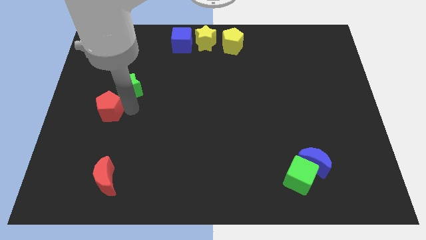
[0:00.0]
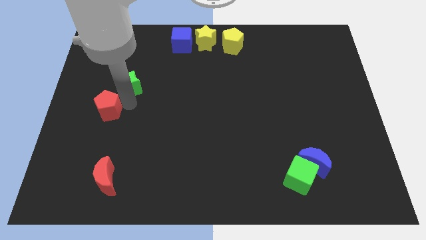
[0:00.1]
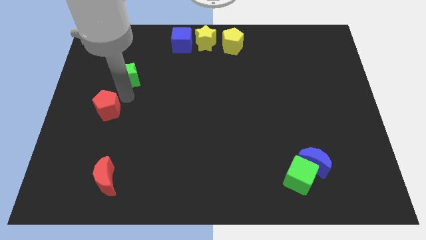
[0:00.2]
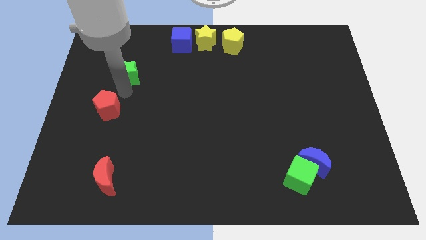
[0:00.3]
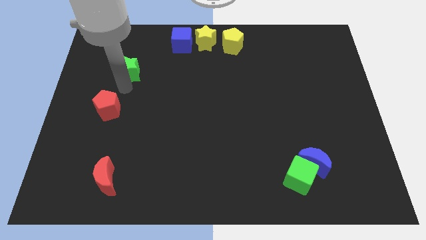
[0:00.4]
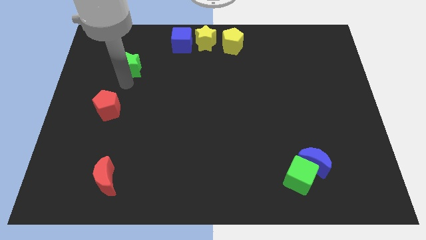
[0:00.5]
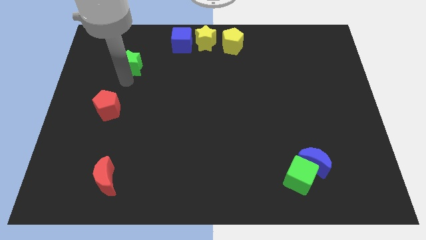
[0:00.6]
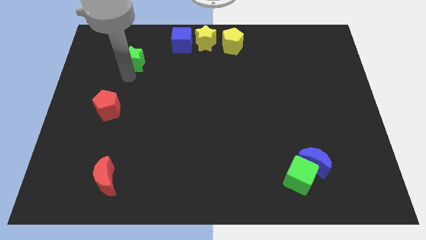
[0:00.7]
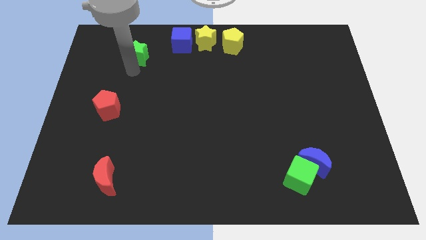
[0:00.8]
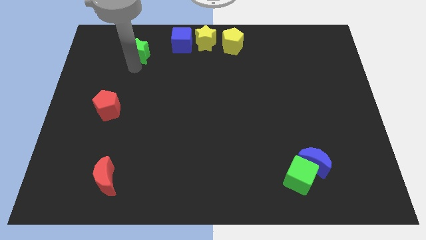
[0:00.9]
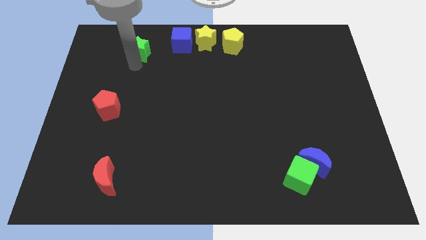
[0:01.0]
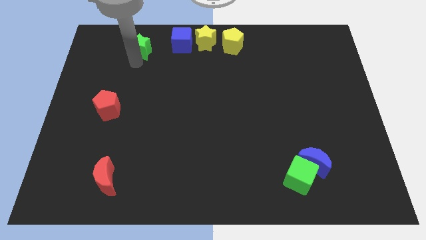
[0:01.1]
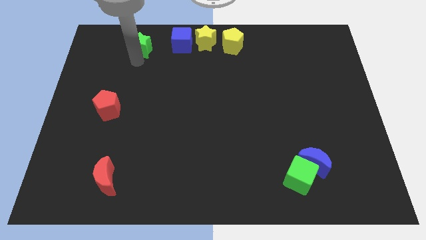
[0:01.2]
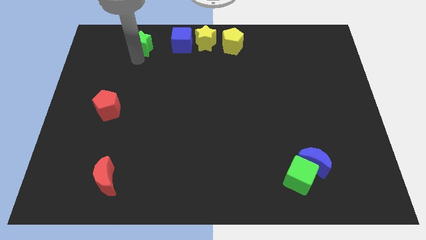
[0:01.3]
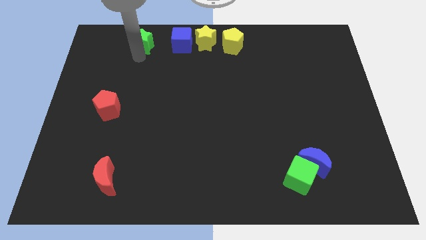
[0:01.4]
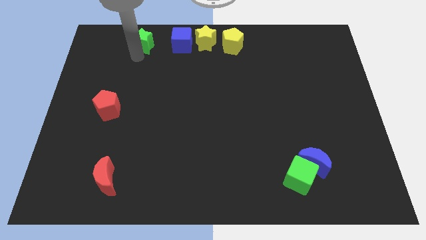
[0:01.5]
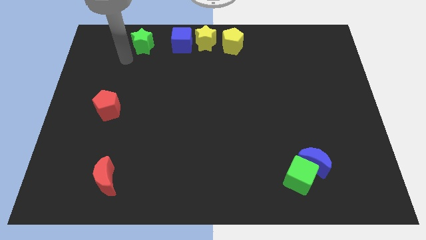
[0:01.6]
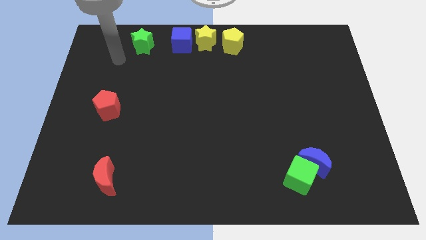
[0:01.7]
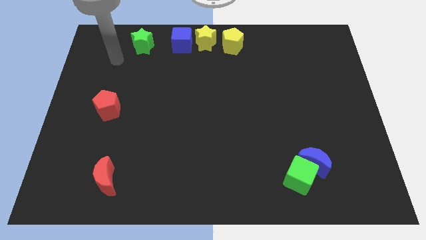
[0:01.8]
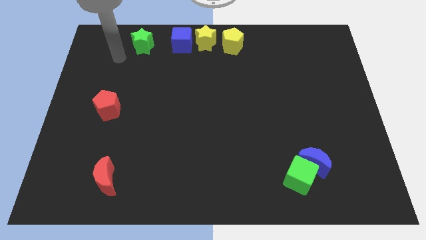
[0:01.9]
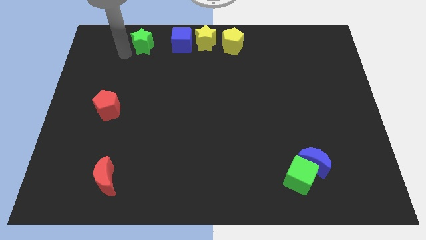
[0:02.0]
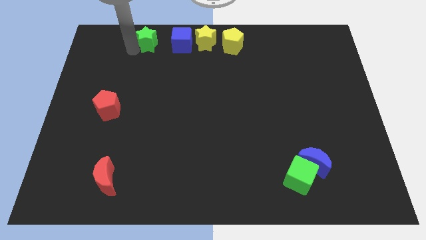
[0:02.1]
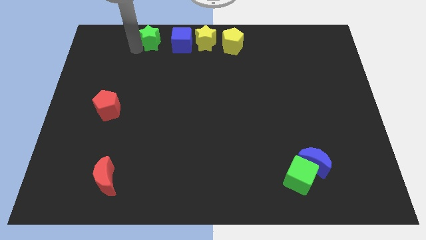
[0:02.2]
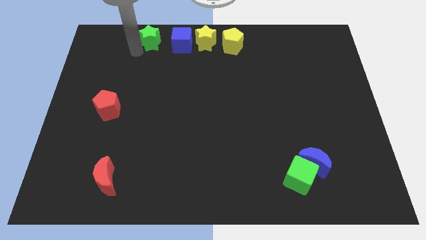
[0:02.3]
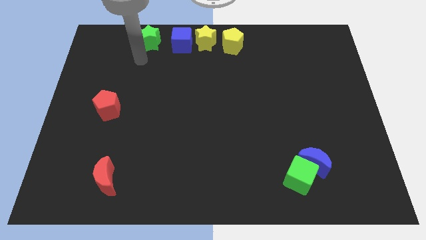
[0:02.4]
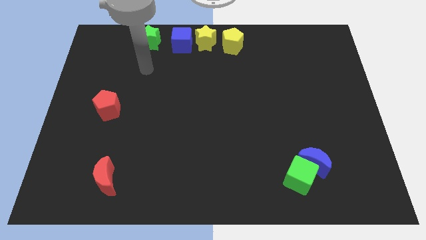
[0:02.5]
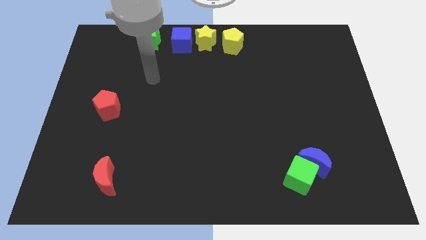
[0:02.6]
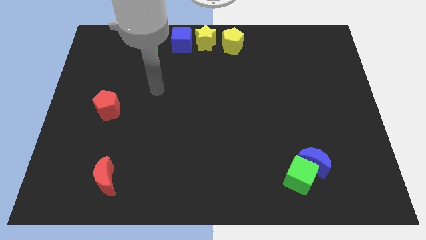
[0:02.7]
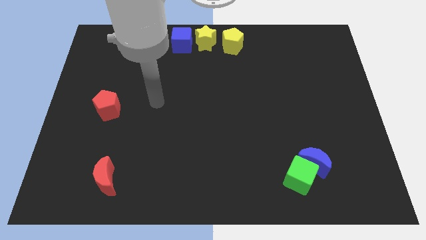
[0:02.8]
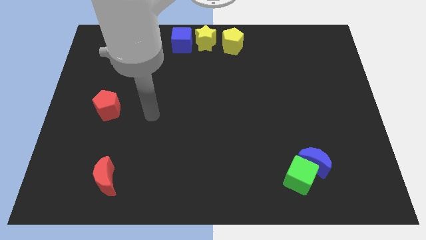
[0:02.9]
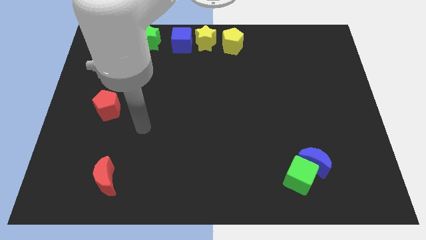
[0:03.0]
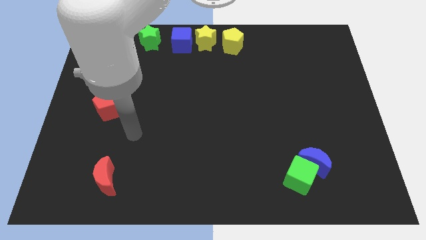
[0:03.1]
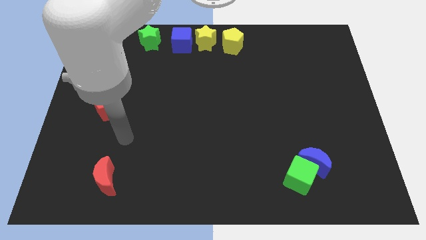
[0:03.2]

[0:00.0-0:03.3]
push the green star left to the blue cube

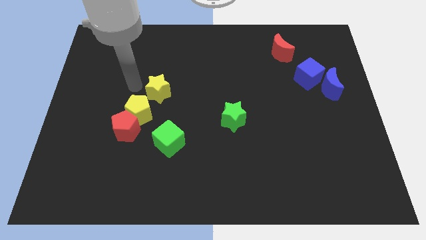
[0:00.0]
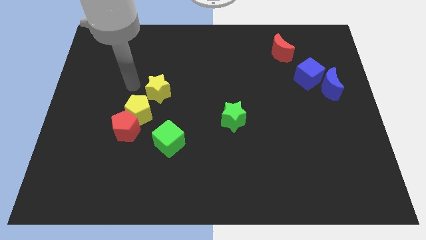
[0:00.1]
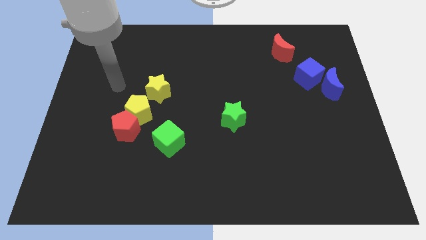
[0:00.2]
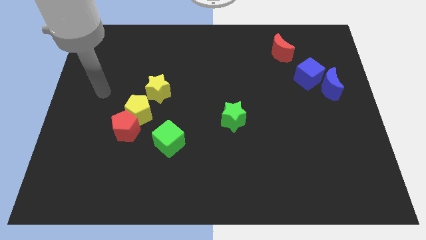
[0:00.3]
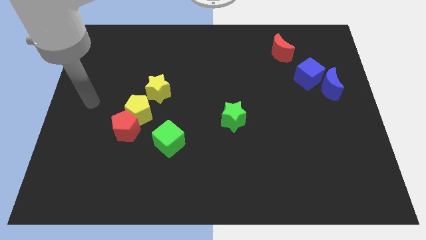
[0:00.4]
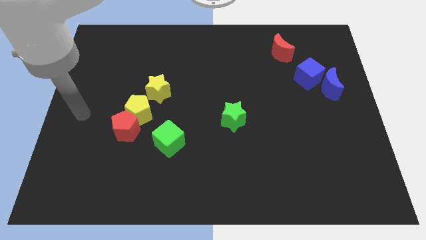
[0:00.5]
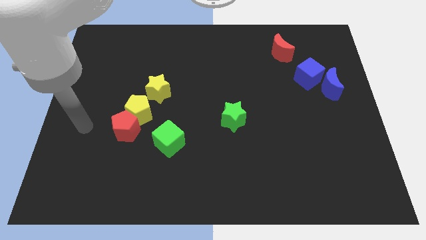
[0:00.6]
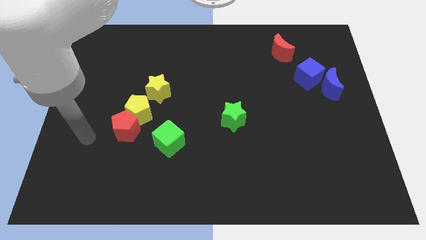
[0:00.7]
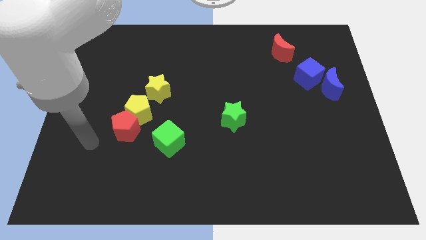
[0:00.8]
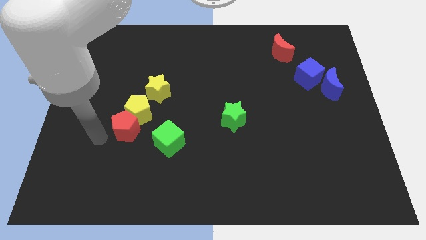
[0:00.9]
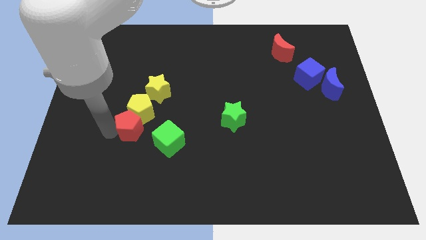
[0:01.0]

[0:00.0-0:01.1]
tap your arm on the left side of red pentagon

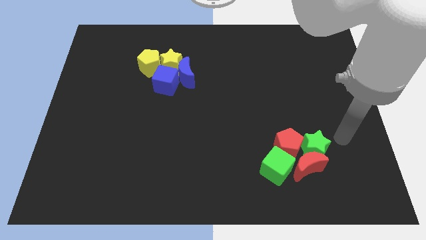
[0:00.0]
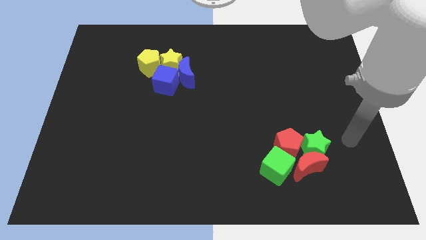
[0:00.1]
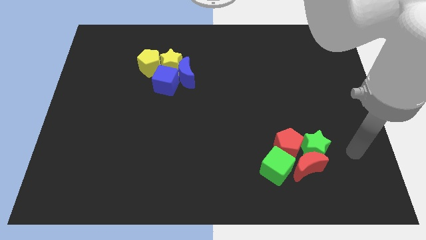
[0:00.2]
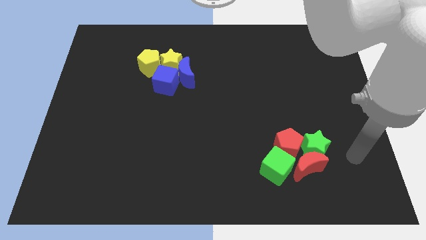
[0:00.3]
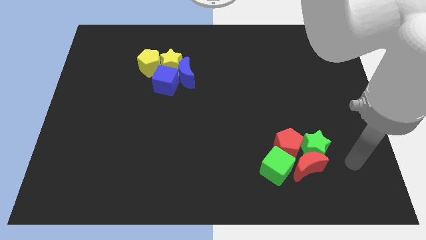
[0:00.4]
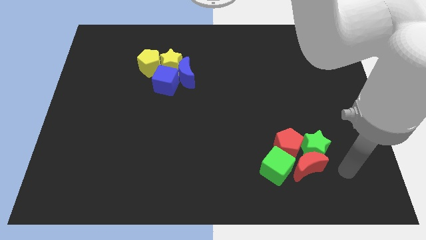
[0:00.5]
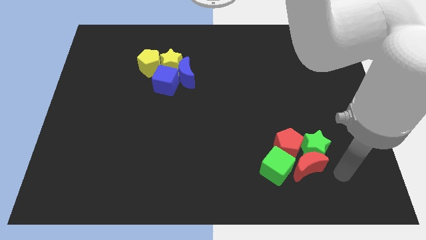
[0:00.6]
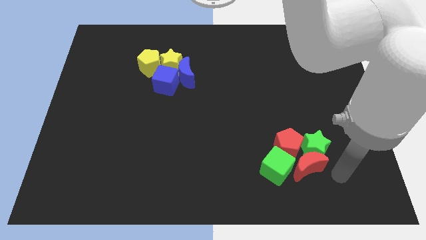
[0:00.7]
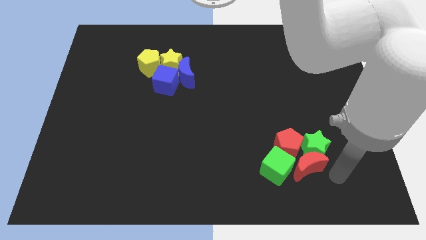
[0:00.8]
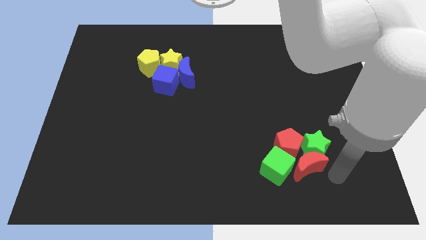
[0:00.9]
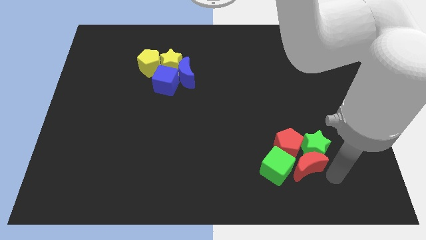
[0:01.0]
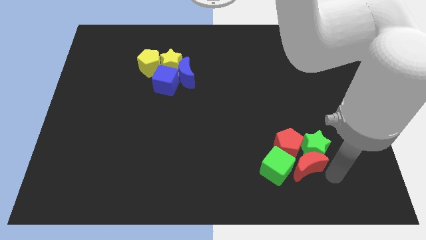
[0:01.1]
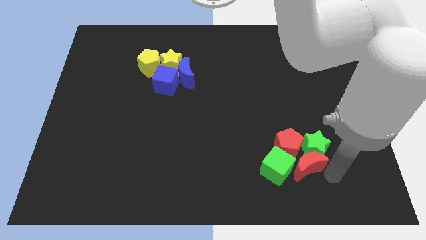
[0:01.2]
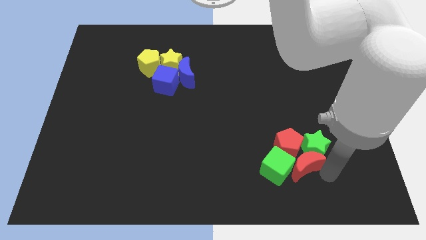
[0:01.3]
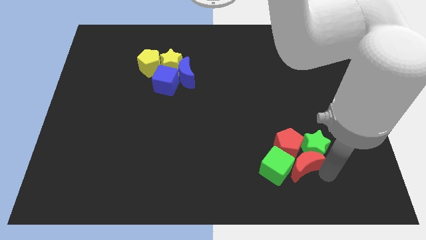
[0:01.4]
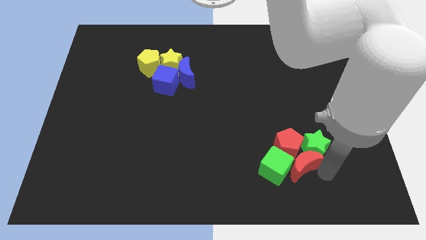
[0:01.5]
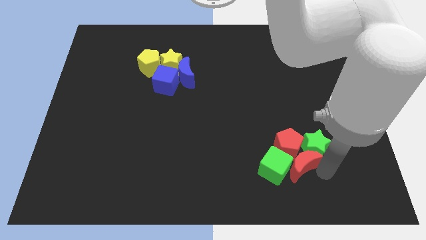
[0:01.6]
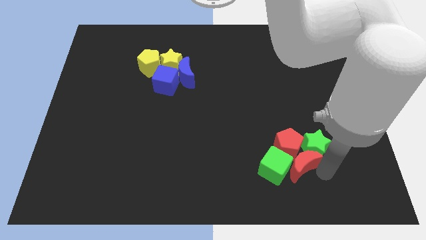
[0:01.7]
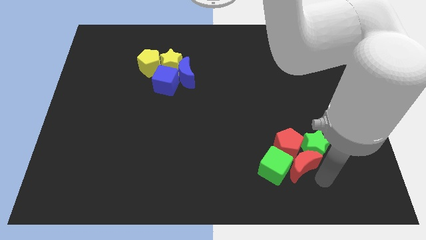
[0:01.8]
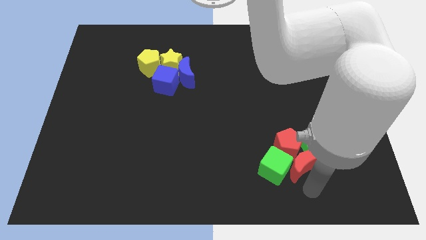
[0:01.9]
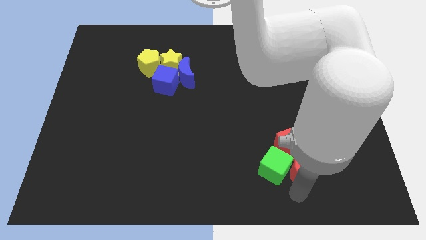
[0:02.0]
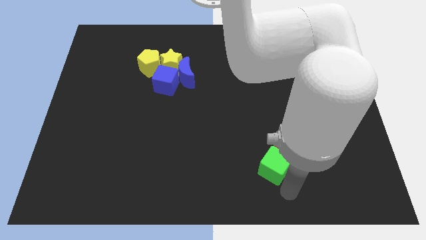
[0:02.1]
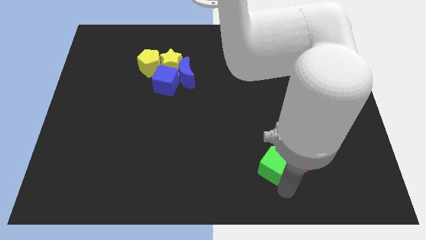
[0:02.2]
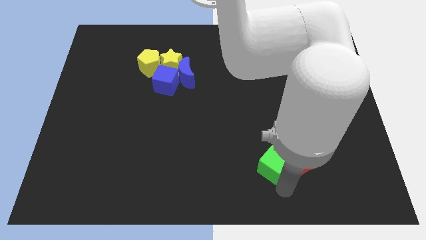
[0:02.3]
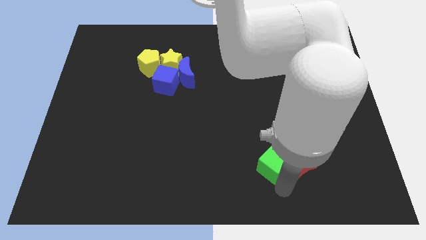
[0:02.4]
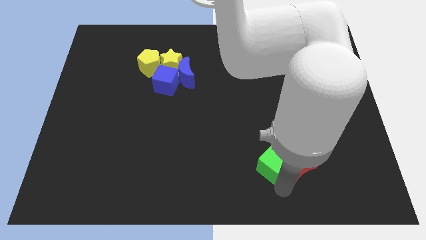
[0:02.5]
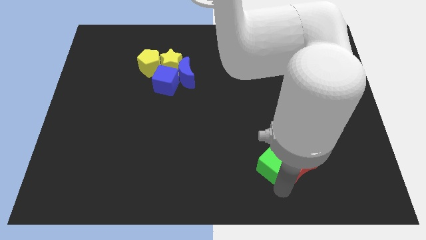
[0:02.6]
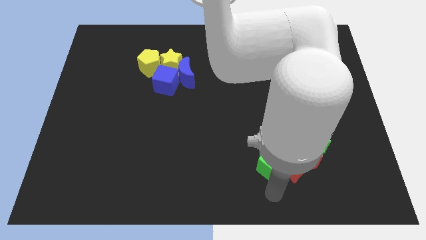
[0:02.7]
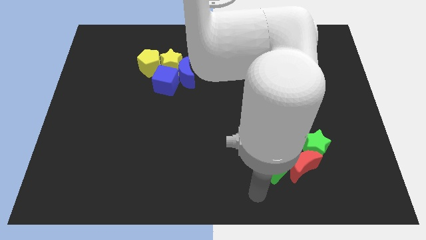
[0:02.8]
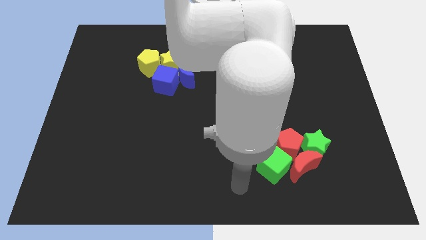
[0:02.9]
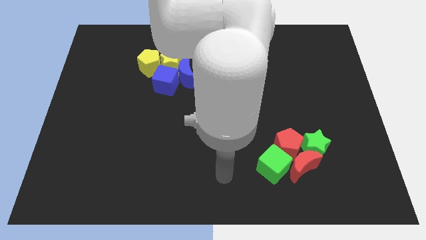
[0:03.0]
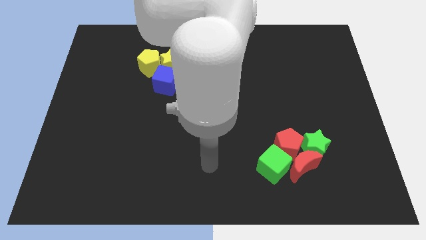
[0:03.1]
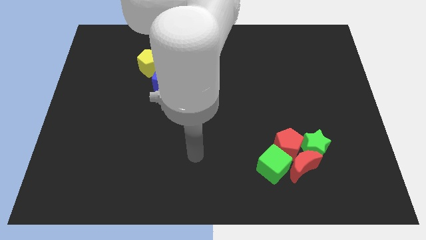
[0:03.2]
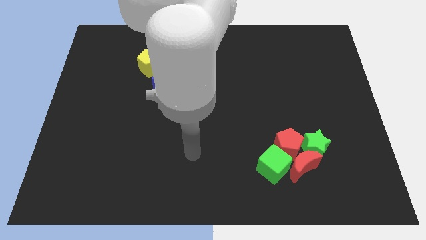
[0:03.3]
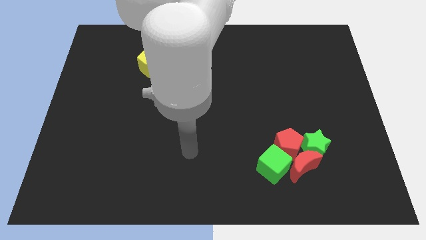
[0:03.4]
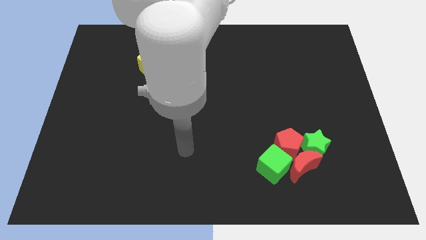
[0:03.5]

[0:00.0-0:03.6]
adjust the green cube into the group from left side

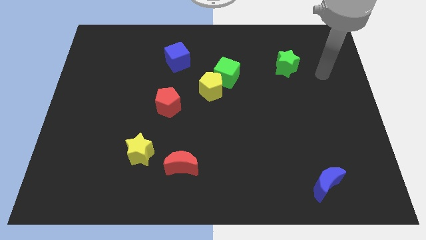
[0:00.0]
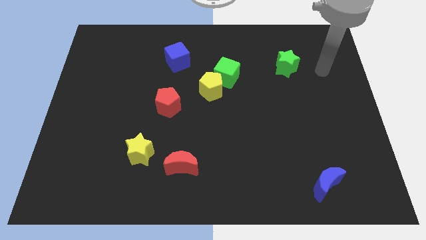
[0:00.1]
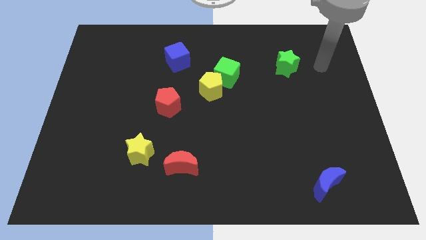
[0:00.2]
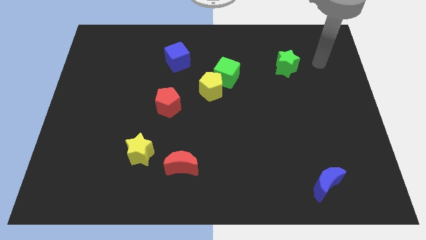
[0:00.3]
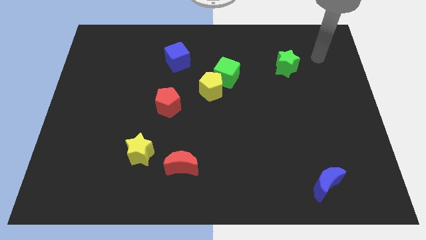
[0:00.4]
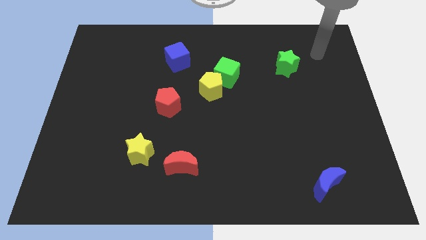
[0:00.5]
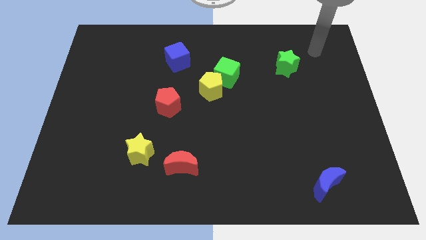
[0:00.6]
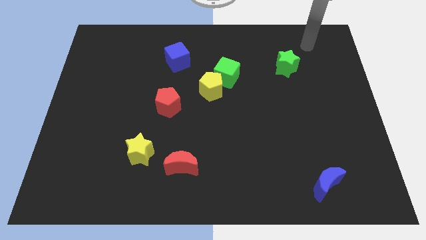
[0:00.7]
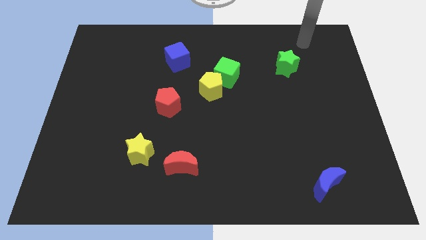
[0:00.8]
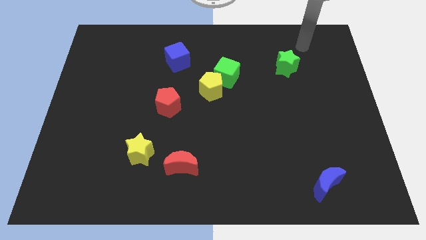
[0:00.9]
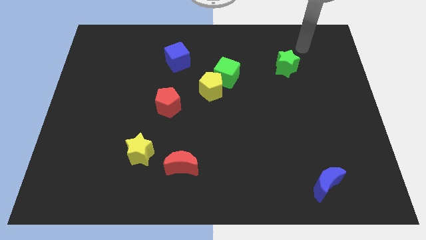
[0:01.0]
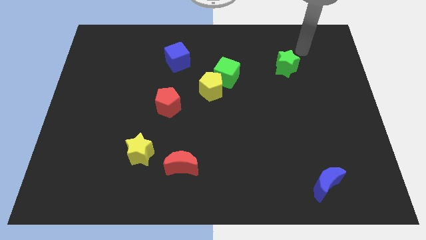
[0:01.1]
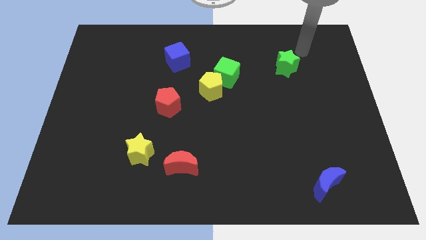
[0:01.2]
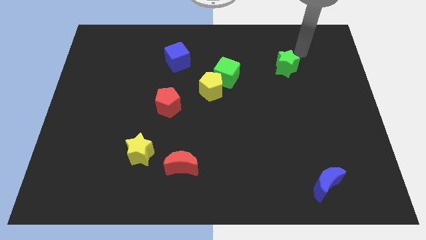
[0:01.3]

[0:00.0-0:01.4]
push your arm at the top right of the green star
